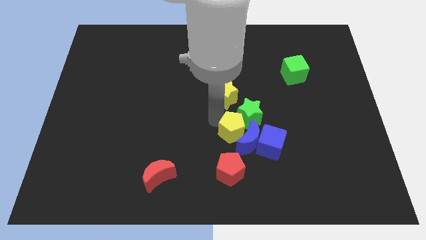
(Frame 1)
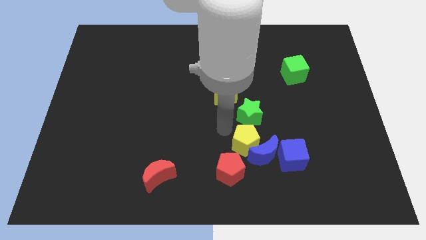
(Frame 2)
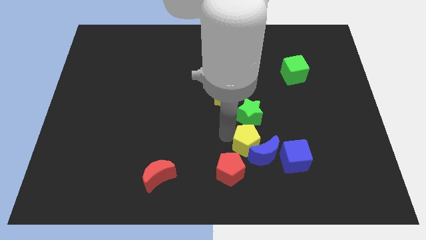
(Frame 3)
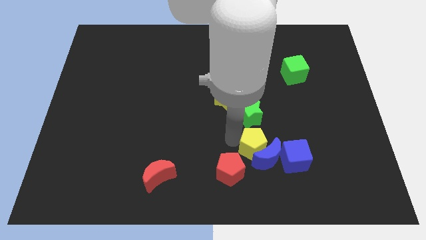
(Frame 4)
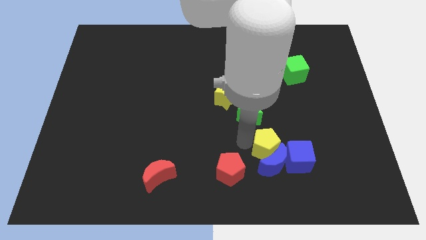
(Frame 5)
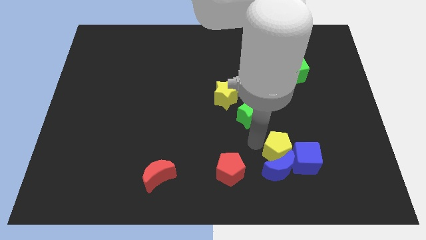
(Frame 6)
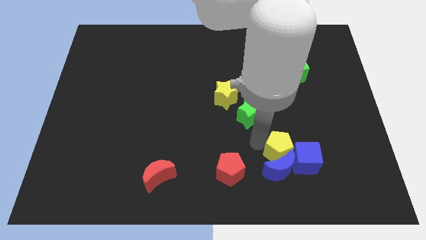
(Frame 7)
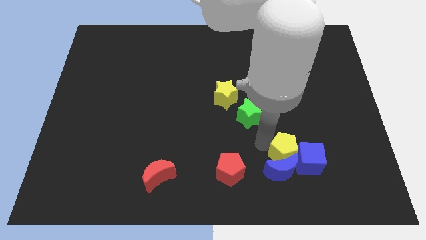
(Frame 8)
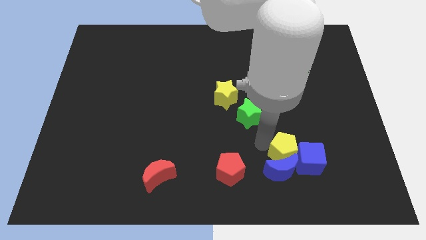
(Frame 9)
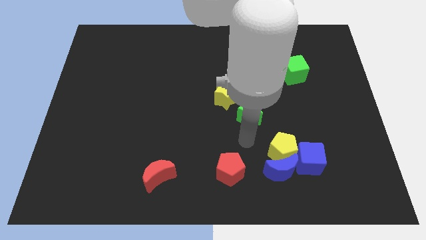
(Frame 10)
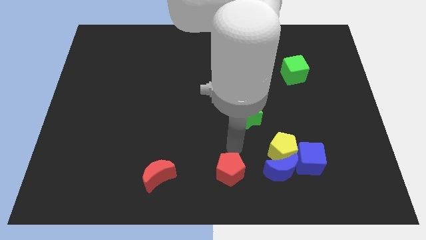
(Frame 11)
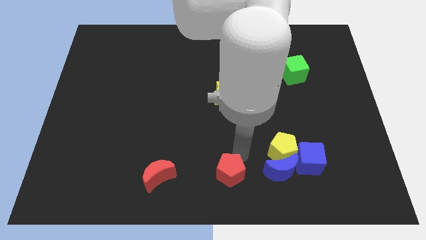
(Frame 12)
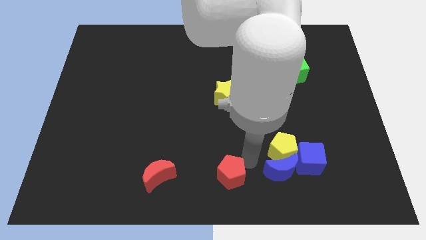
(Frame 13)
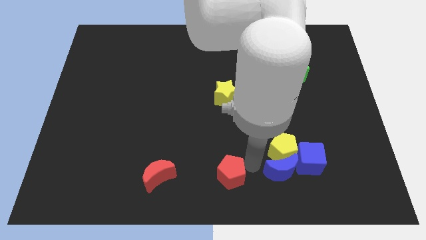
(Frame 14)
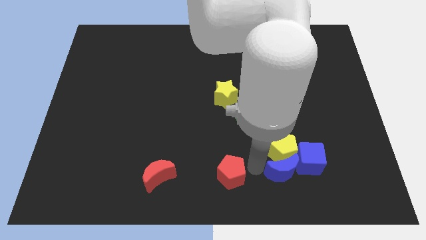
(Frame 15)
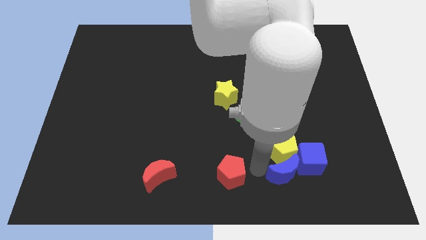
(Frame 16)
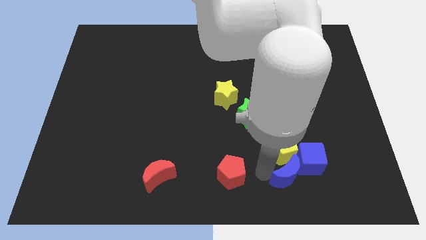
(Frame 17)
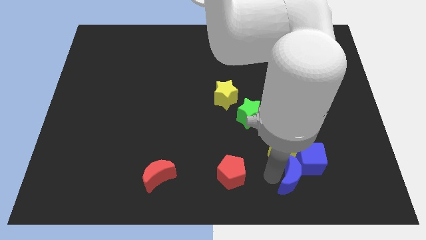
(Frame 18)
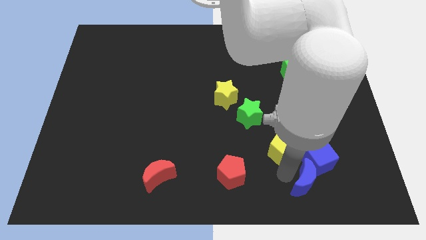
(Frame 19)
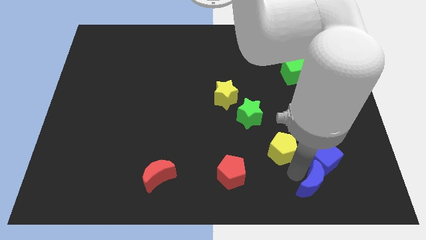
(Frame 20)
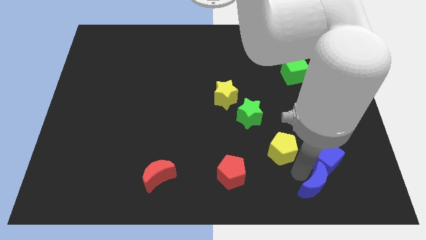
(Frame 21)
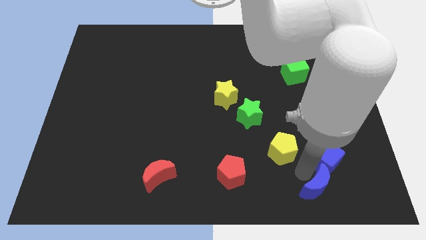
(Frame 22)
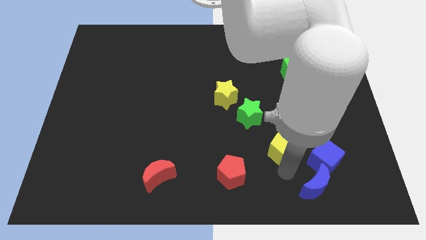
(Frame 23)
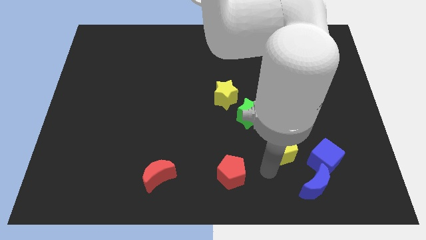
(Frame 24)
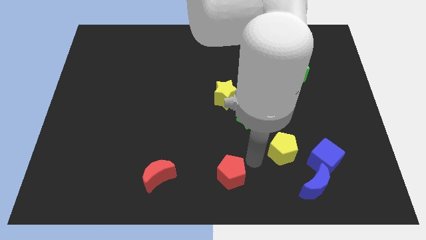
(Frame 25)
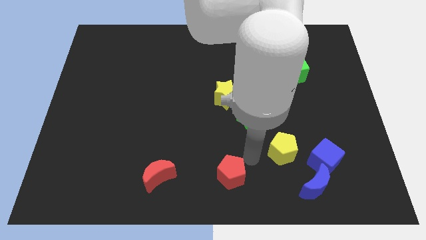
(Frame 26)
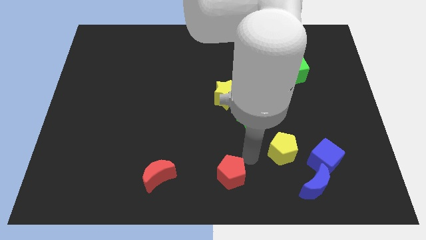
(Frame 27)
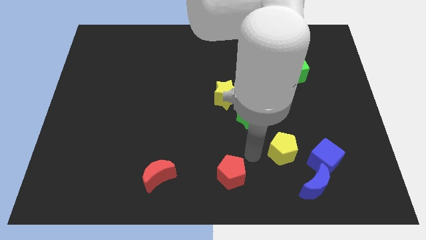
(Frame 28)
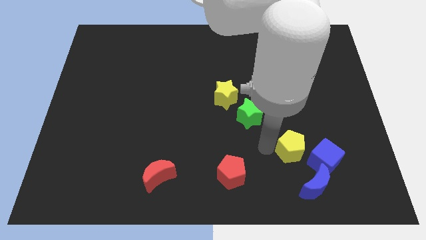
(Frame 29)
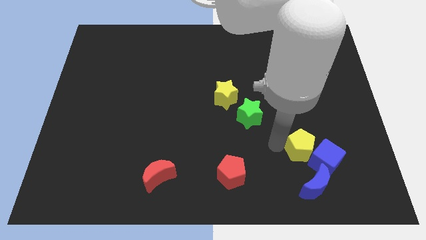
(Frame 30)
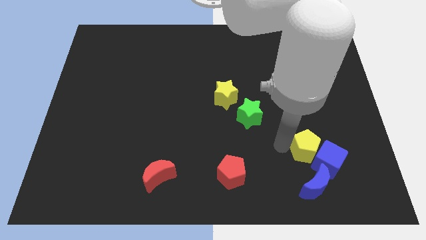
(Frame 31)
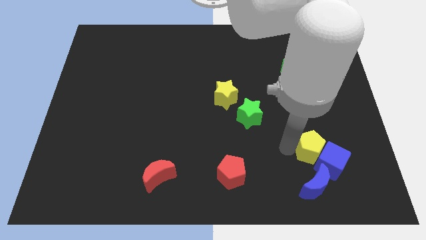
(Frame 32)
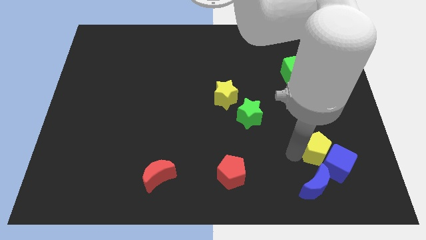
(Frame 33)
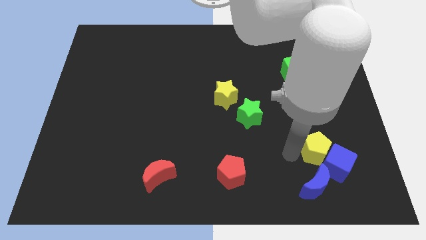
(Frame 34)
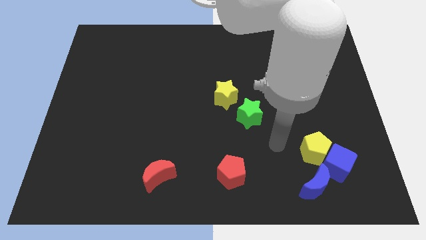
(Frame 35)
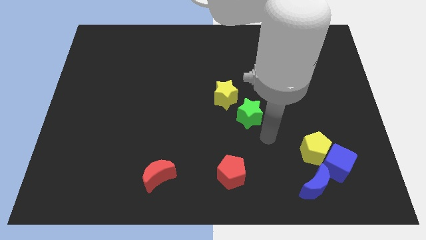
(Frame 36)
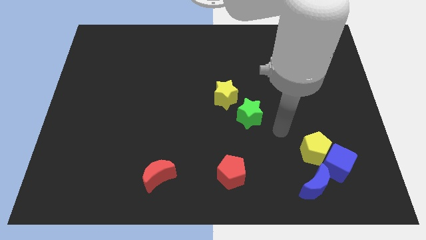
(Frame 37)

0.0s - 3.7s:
push the yellow pentagon and blue blocks to the bottom right

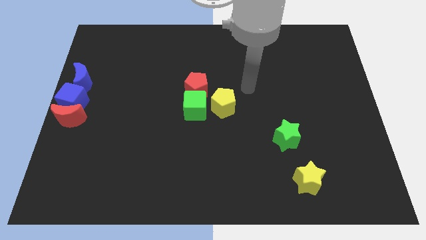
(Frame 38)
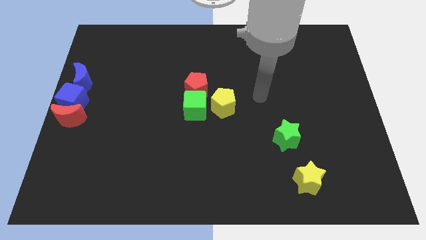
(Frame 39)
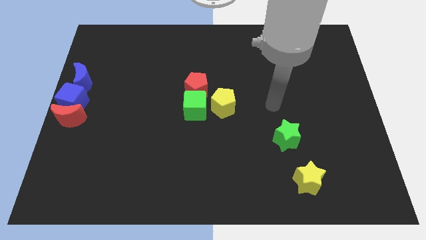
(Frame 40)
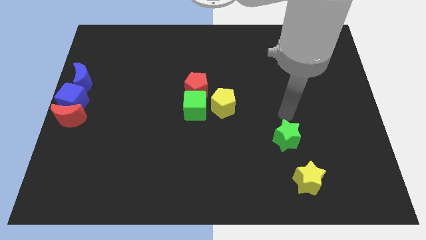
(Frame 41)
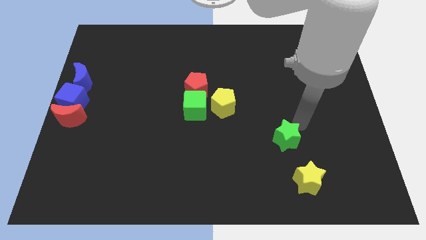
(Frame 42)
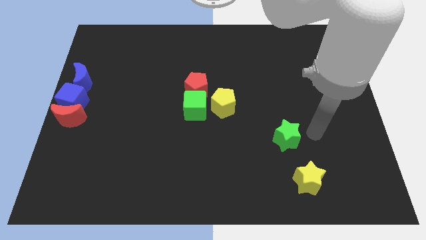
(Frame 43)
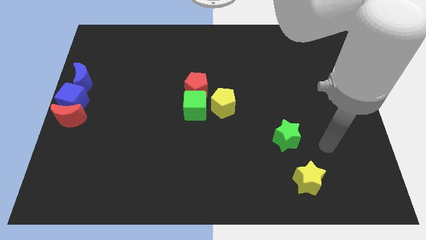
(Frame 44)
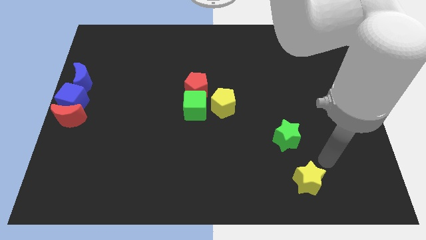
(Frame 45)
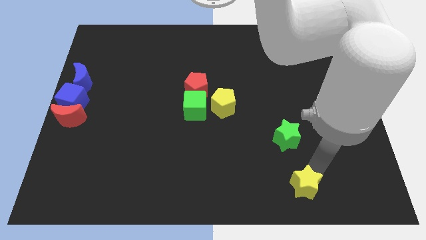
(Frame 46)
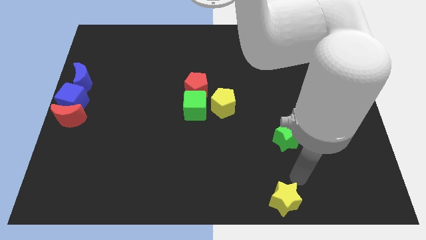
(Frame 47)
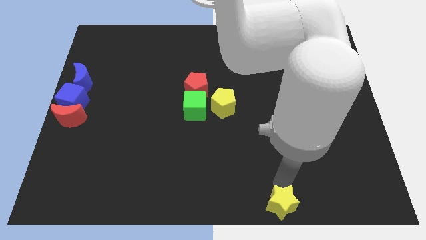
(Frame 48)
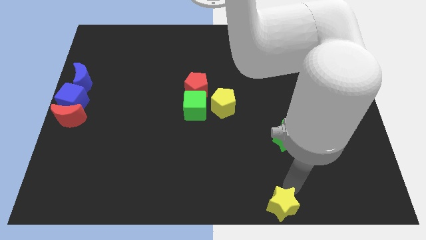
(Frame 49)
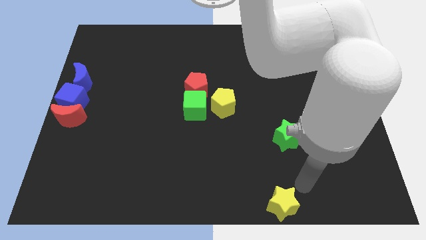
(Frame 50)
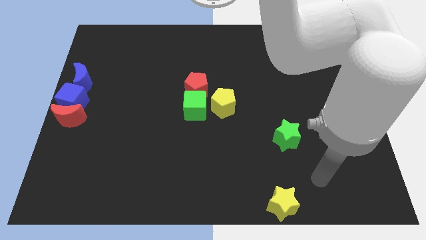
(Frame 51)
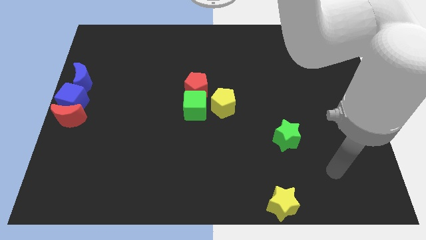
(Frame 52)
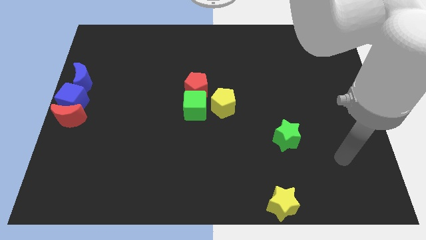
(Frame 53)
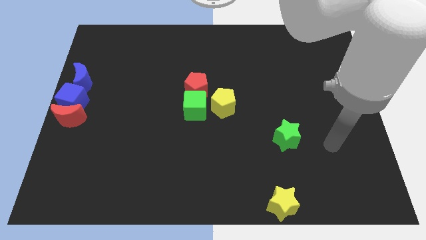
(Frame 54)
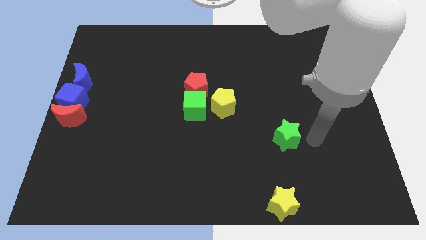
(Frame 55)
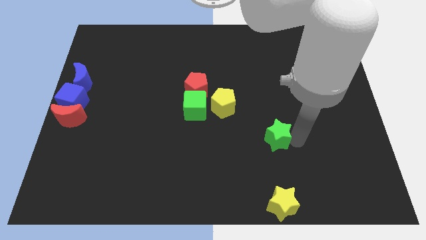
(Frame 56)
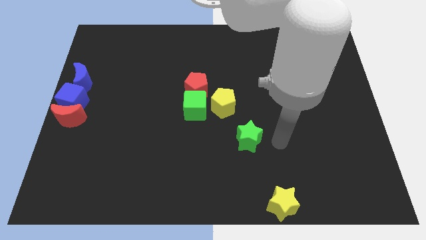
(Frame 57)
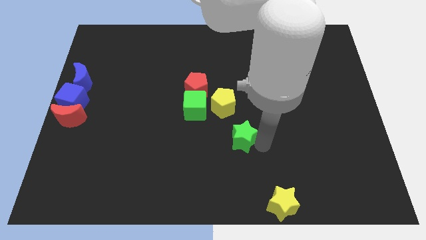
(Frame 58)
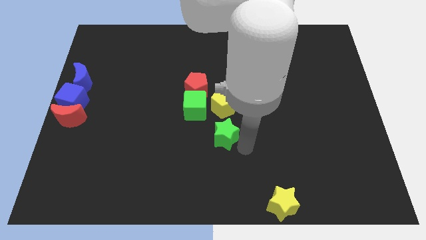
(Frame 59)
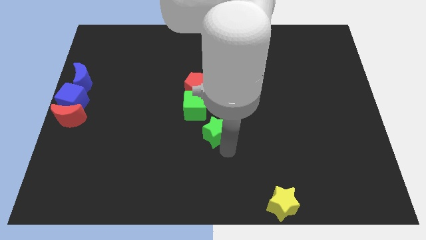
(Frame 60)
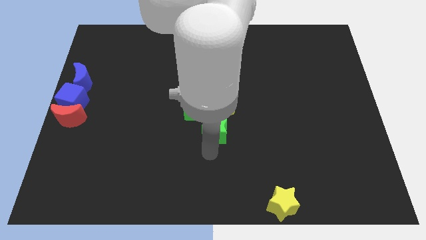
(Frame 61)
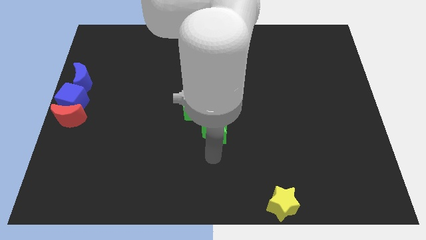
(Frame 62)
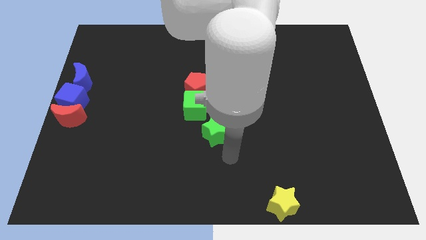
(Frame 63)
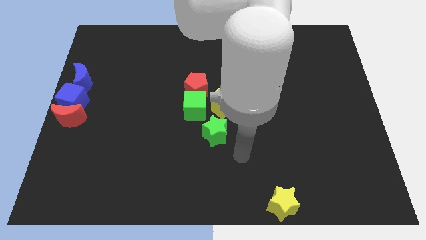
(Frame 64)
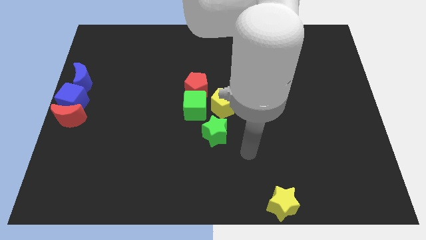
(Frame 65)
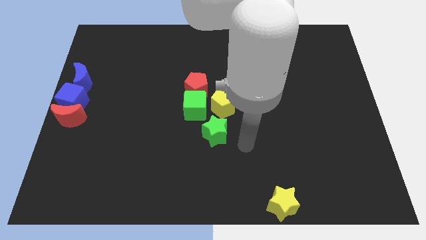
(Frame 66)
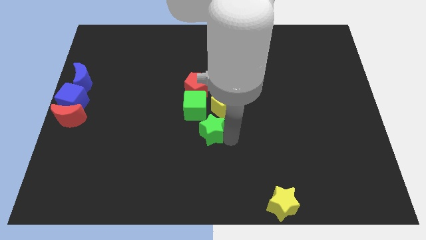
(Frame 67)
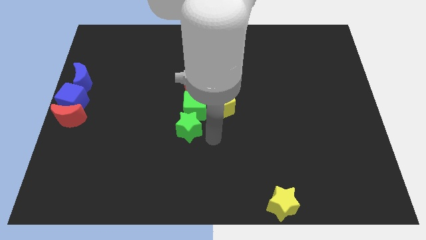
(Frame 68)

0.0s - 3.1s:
slide yellow star and the green star diagonal to each other

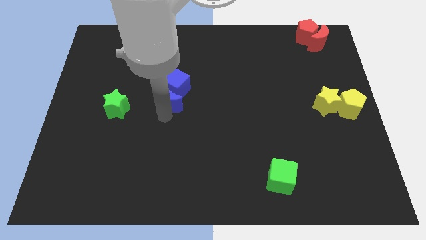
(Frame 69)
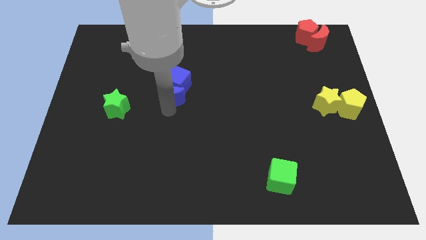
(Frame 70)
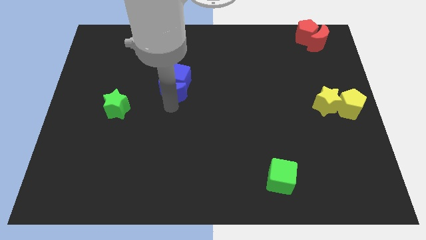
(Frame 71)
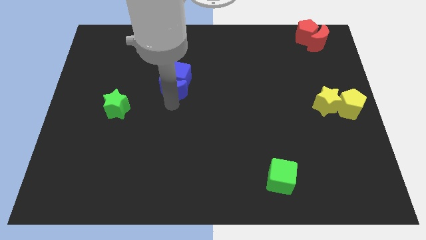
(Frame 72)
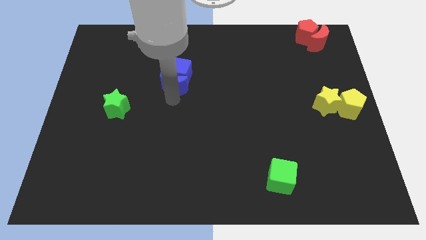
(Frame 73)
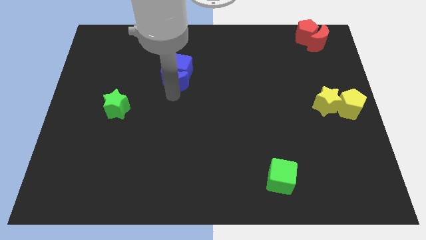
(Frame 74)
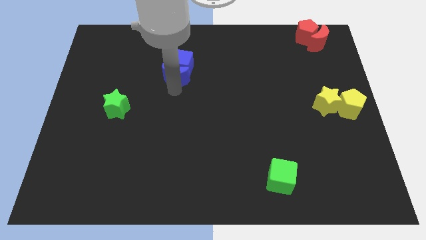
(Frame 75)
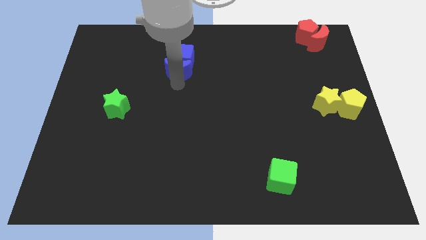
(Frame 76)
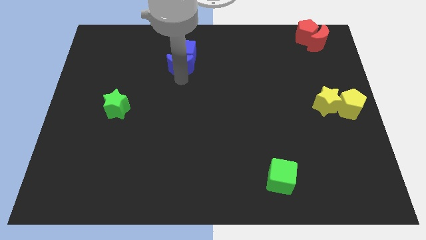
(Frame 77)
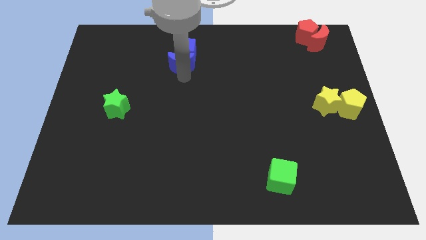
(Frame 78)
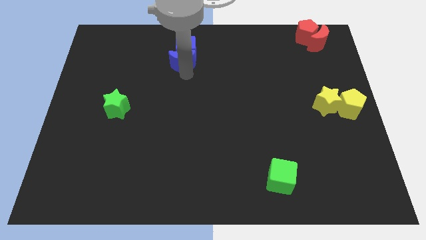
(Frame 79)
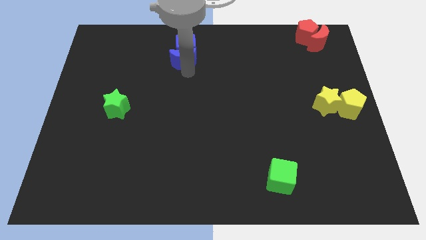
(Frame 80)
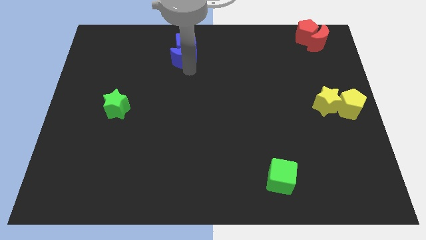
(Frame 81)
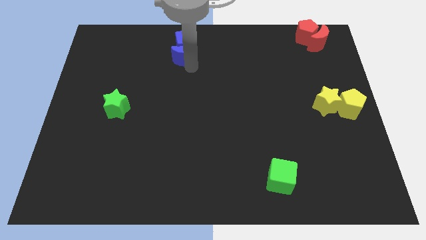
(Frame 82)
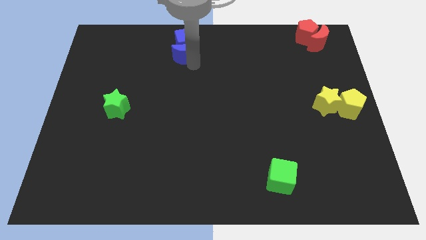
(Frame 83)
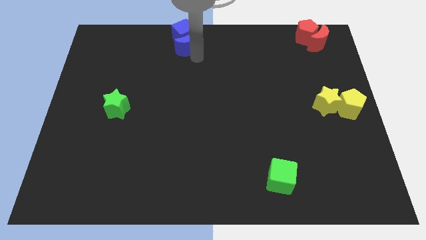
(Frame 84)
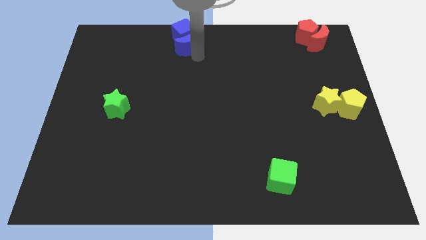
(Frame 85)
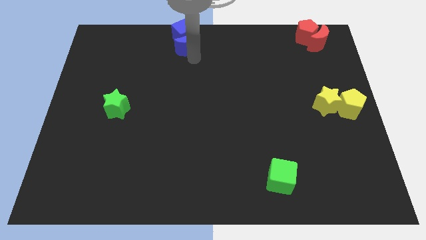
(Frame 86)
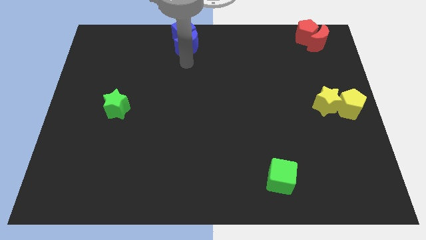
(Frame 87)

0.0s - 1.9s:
move the blue crescent along the blue cube to the top side of the board

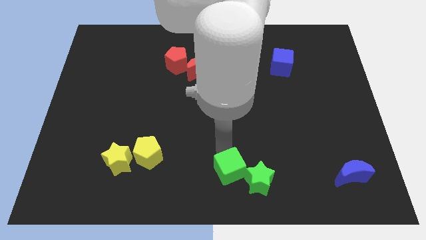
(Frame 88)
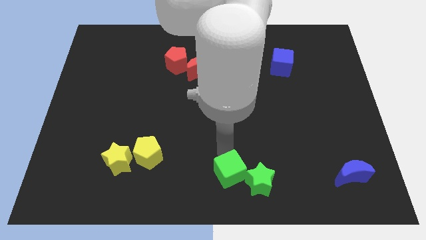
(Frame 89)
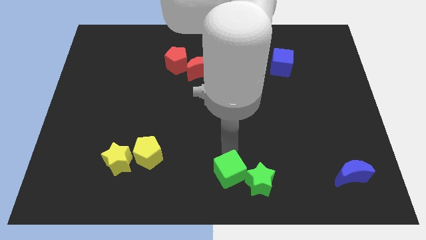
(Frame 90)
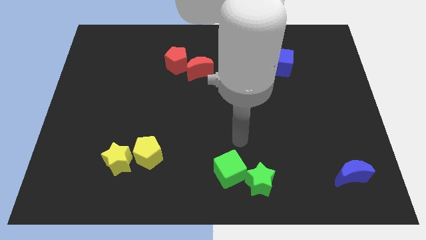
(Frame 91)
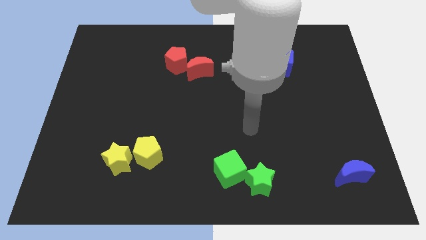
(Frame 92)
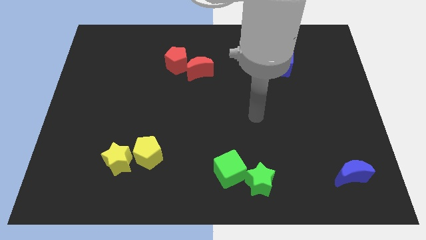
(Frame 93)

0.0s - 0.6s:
move both green cube and green star to the bottom center of the board

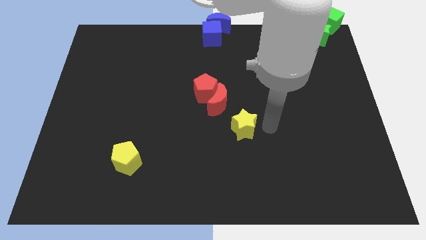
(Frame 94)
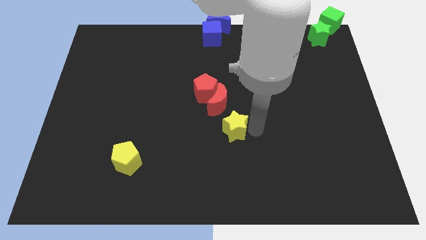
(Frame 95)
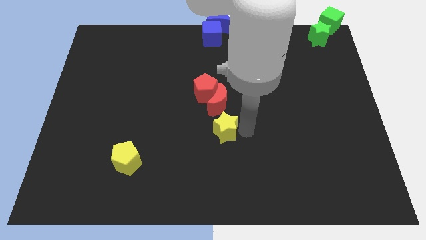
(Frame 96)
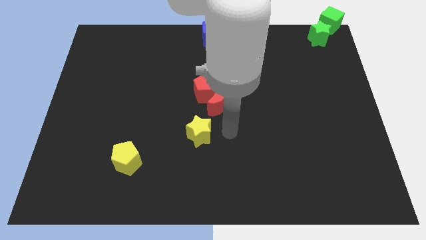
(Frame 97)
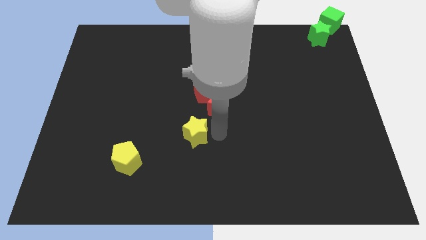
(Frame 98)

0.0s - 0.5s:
place the yellow star below the red pentagon
